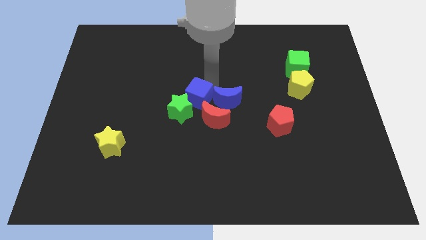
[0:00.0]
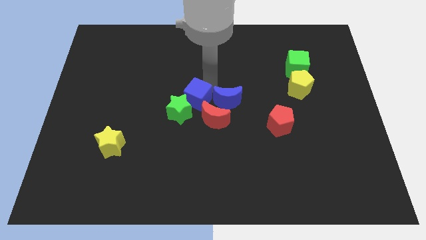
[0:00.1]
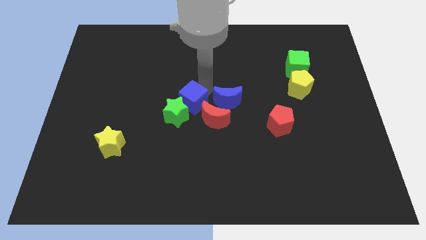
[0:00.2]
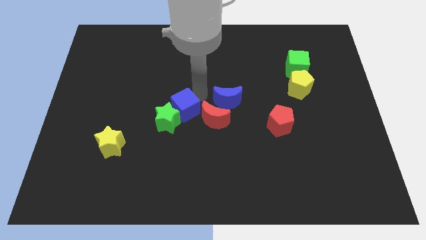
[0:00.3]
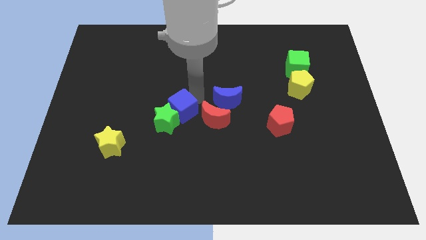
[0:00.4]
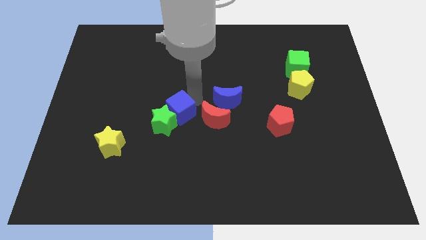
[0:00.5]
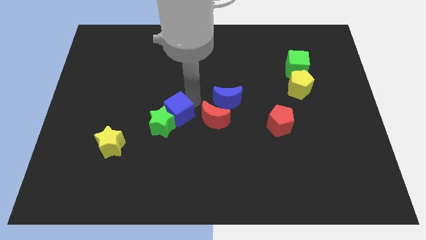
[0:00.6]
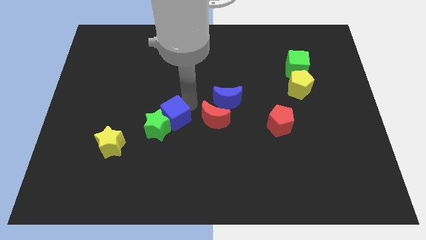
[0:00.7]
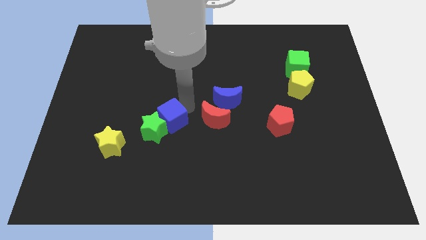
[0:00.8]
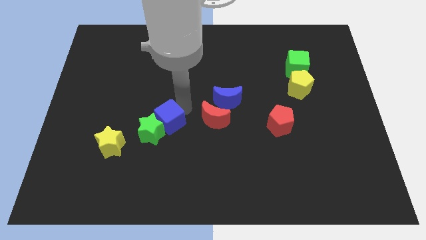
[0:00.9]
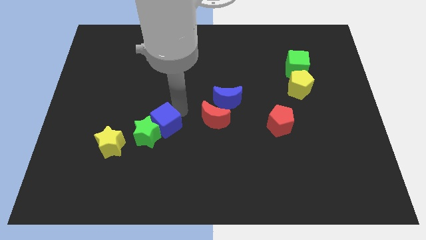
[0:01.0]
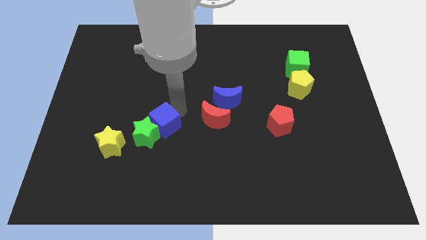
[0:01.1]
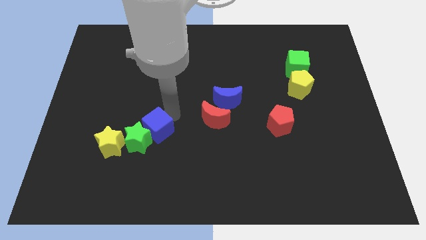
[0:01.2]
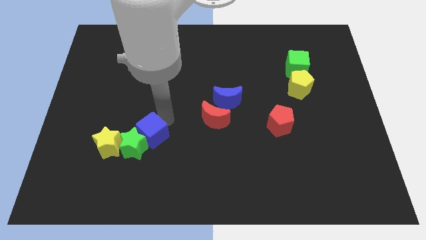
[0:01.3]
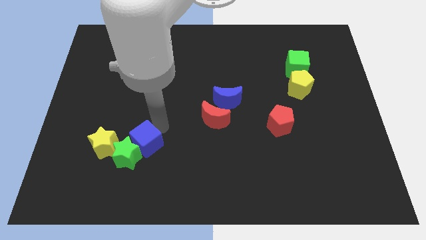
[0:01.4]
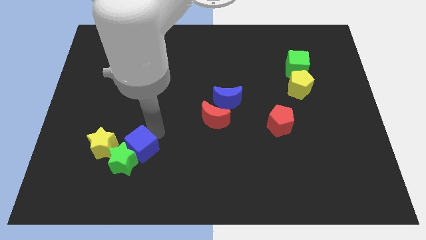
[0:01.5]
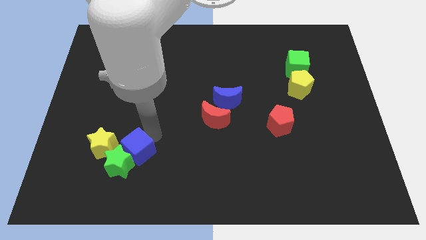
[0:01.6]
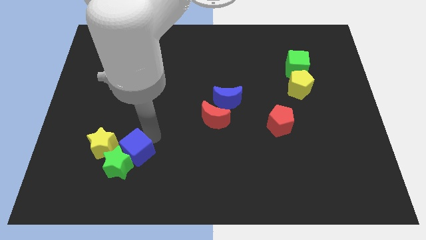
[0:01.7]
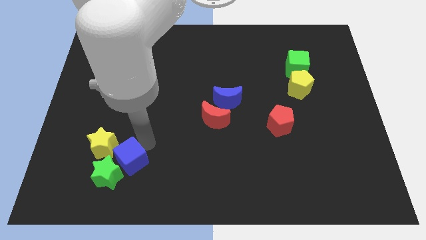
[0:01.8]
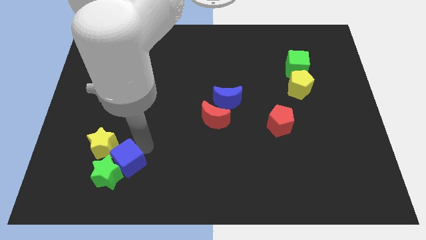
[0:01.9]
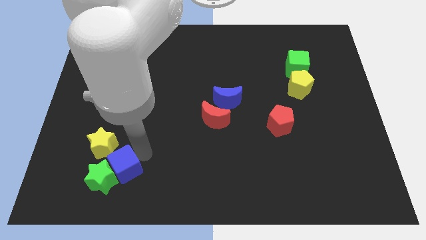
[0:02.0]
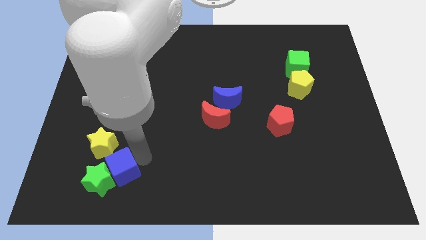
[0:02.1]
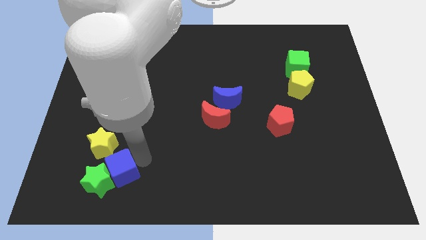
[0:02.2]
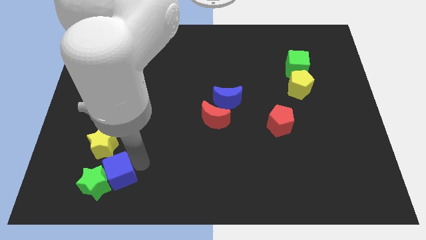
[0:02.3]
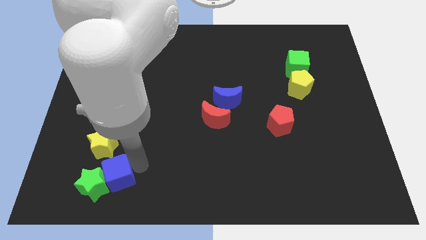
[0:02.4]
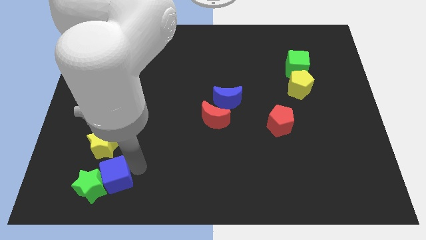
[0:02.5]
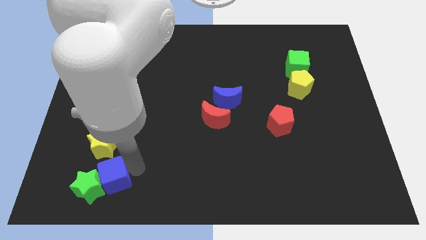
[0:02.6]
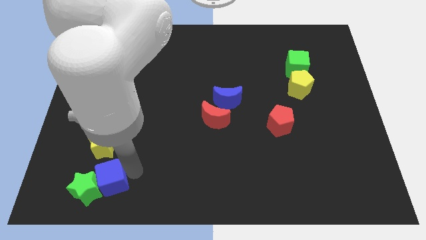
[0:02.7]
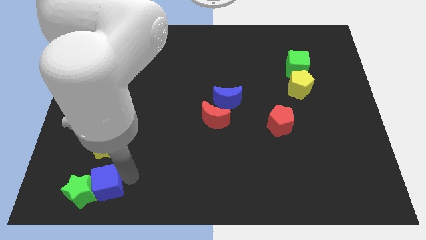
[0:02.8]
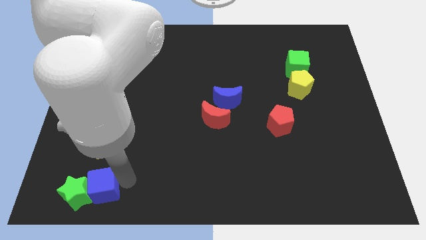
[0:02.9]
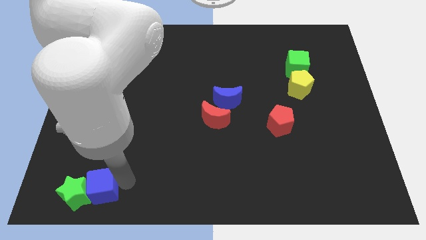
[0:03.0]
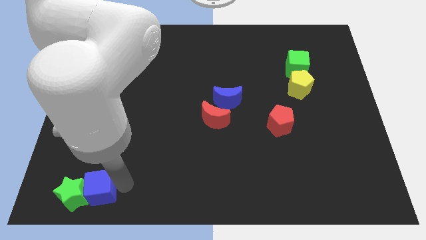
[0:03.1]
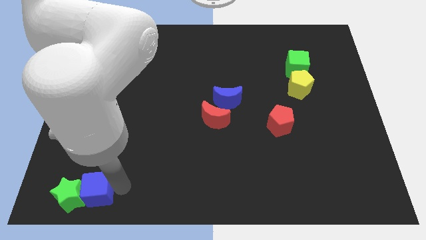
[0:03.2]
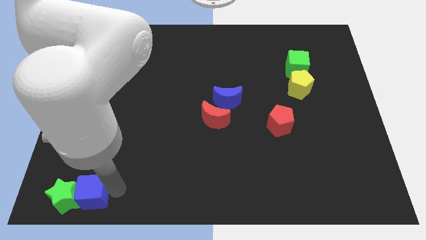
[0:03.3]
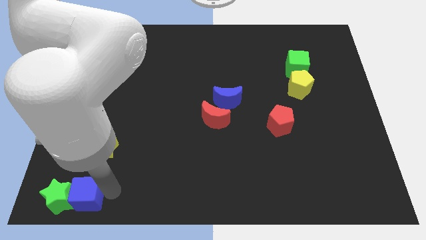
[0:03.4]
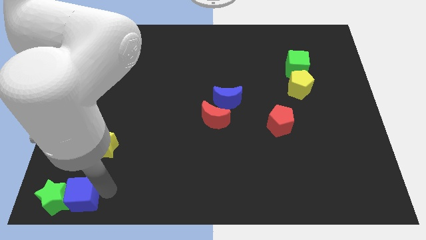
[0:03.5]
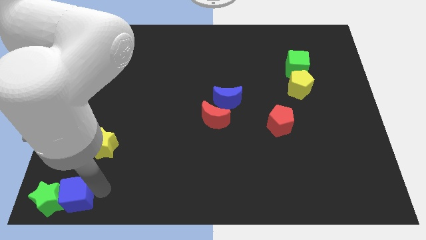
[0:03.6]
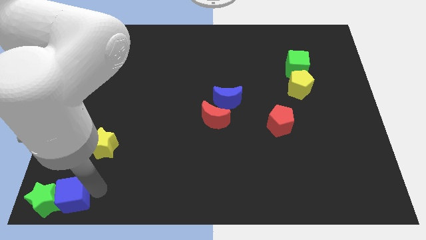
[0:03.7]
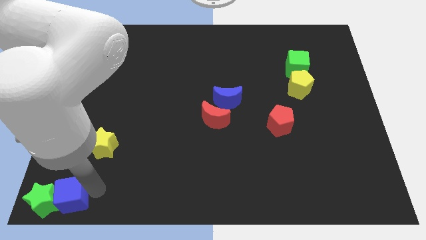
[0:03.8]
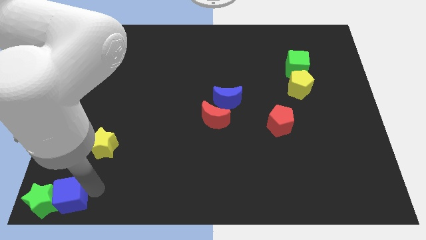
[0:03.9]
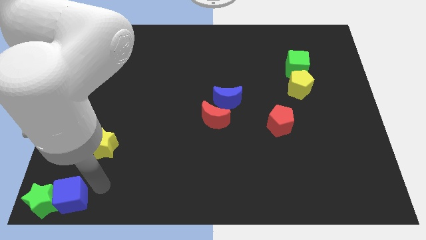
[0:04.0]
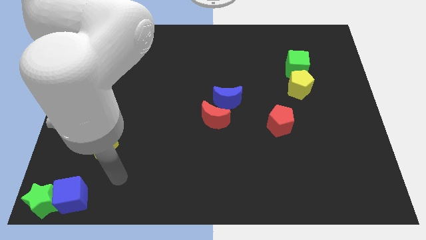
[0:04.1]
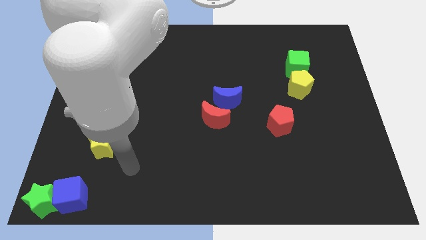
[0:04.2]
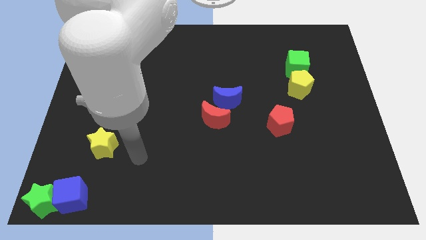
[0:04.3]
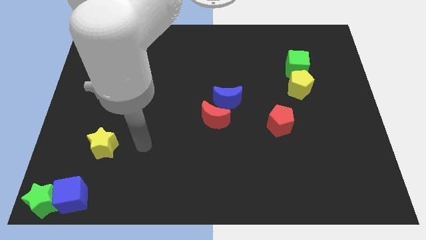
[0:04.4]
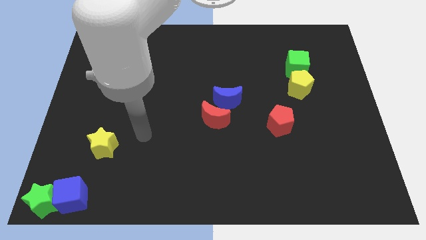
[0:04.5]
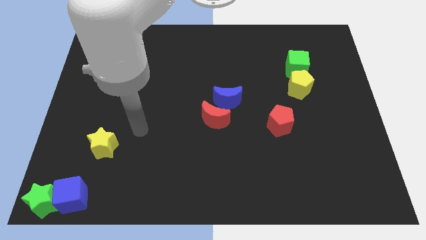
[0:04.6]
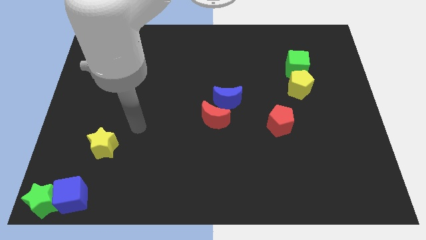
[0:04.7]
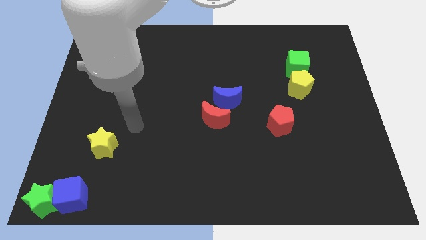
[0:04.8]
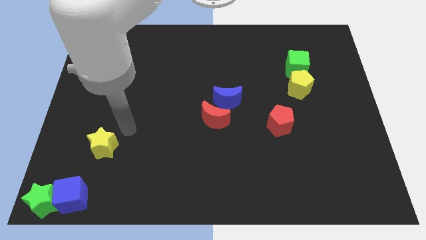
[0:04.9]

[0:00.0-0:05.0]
place the blue cube and green star together at the bottom left corner of the board

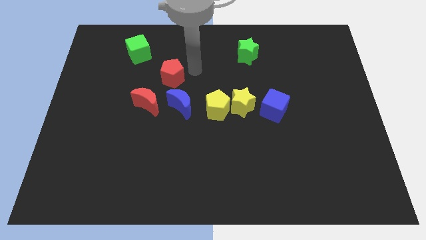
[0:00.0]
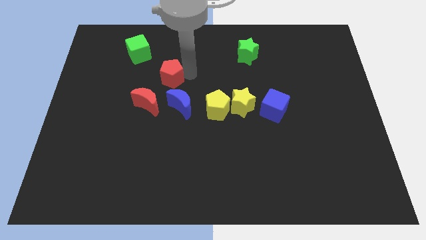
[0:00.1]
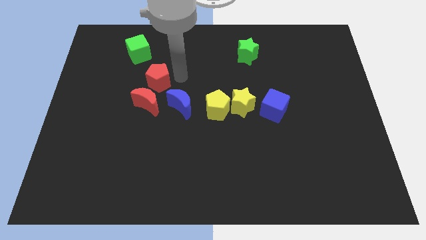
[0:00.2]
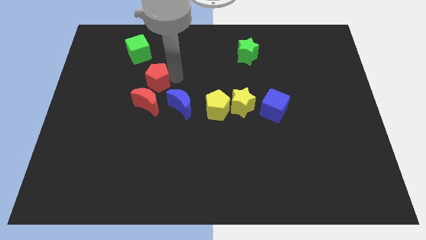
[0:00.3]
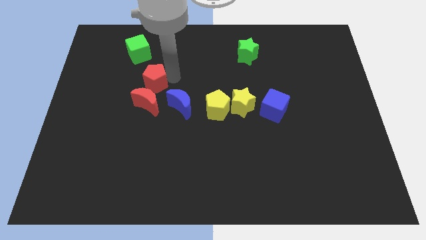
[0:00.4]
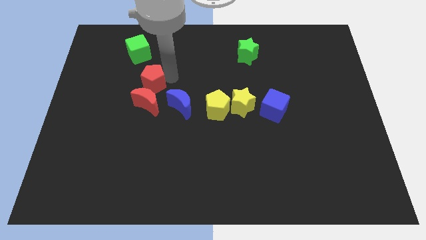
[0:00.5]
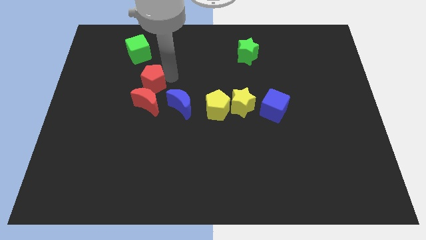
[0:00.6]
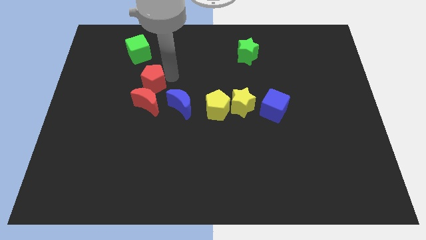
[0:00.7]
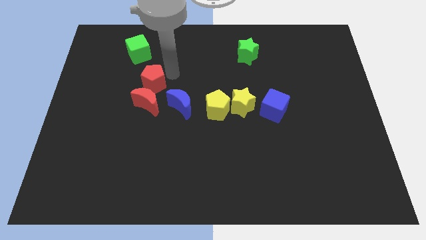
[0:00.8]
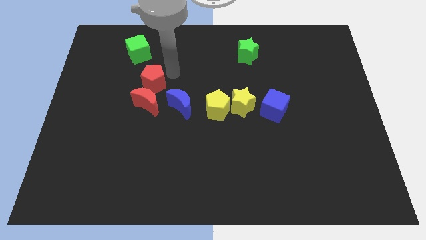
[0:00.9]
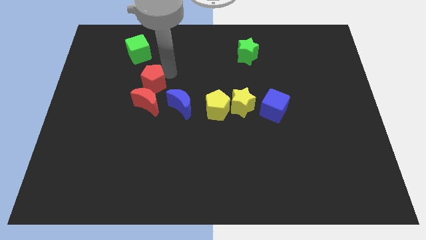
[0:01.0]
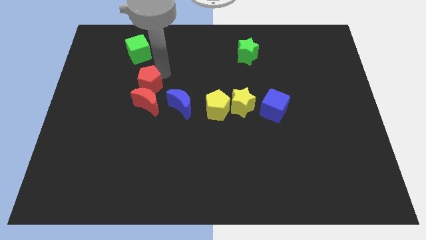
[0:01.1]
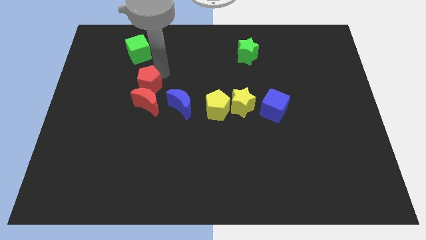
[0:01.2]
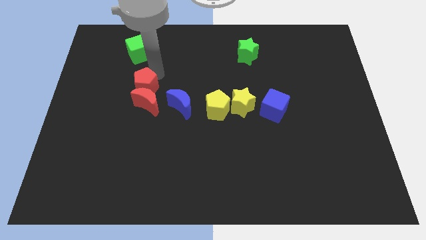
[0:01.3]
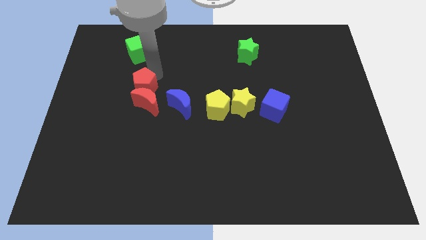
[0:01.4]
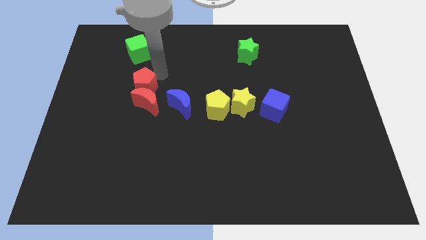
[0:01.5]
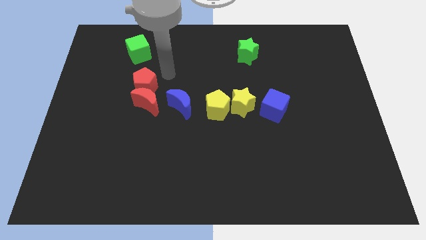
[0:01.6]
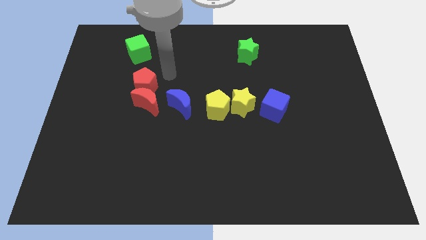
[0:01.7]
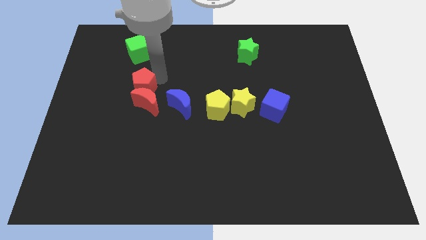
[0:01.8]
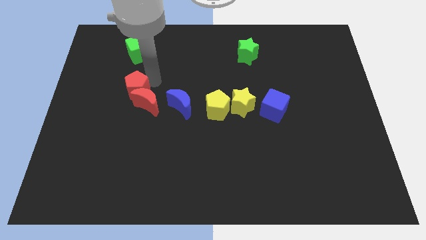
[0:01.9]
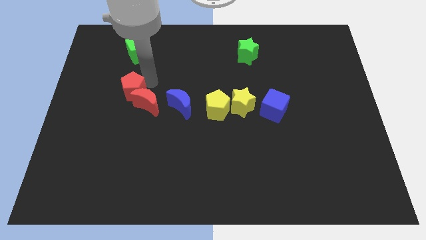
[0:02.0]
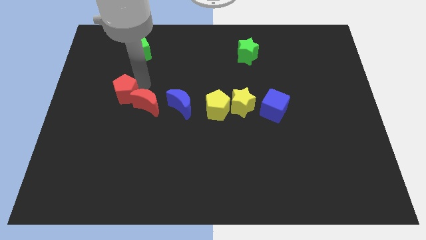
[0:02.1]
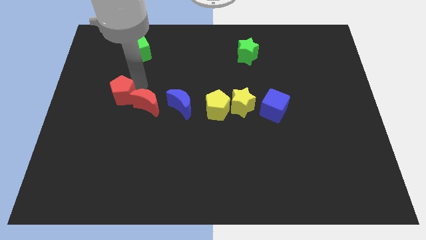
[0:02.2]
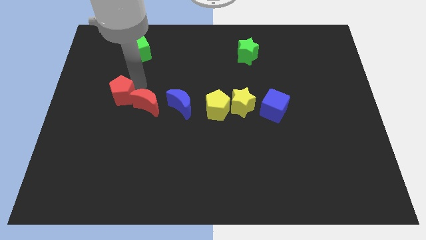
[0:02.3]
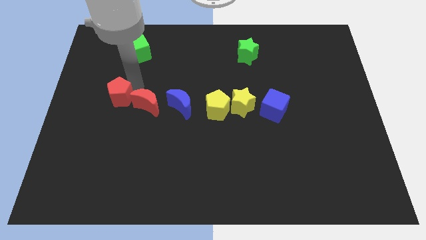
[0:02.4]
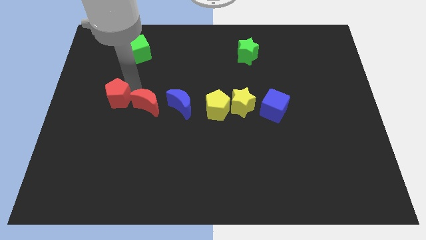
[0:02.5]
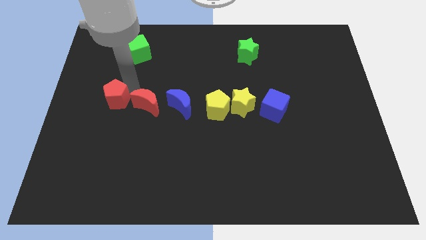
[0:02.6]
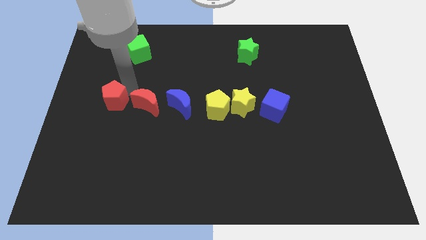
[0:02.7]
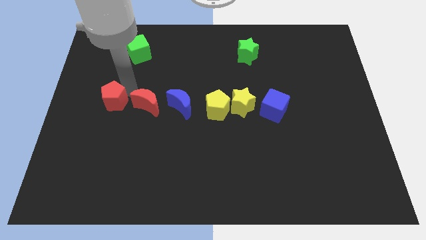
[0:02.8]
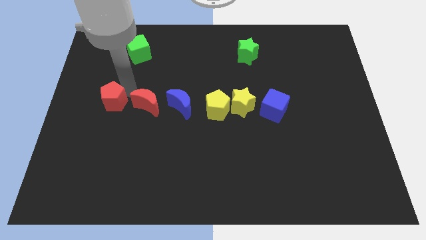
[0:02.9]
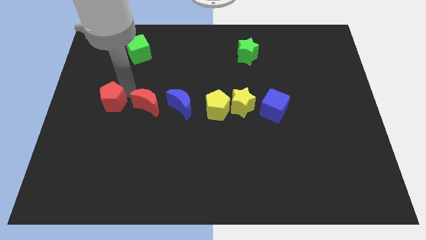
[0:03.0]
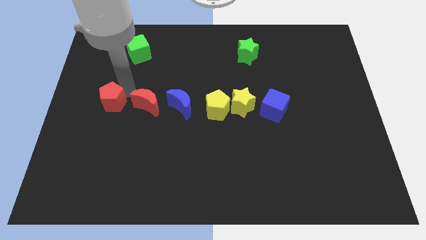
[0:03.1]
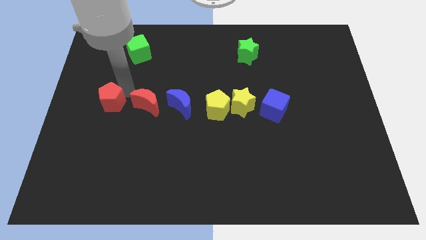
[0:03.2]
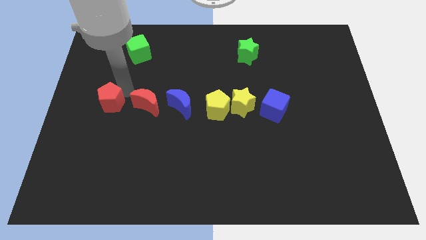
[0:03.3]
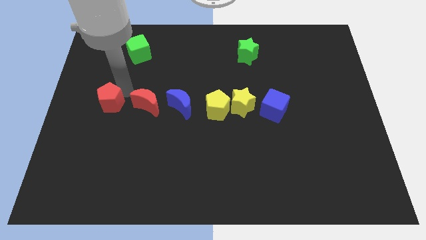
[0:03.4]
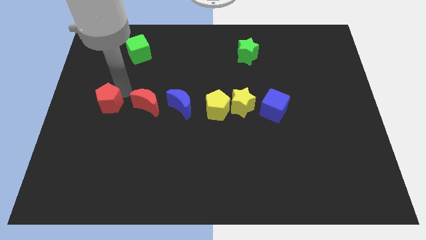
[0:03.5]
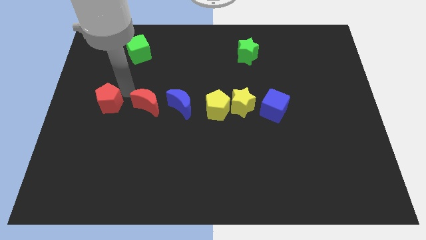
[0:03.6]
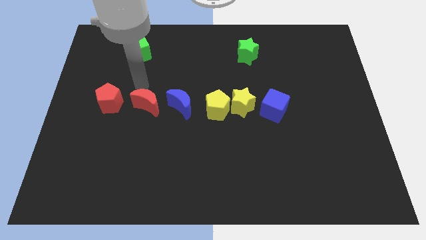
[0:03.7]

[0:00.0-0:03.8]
move the red pentagon towards the left to the red crescent
